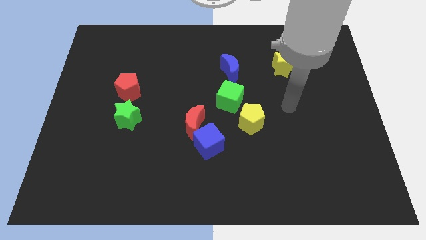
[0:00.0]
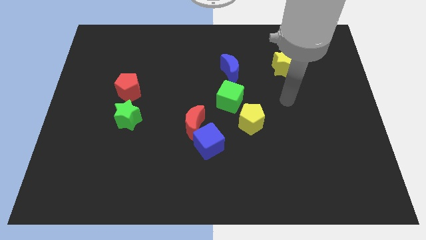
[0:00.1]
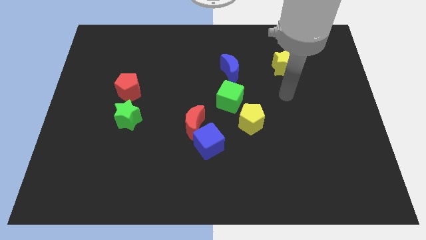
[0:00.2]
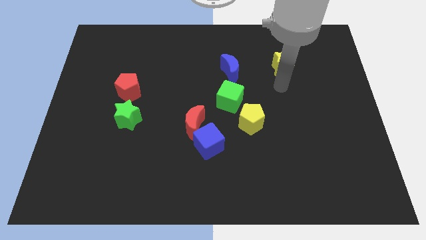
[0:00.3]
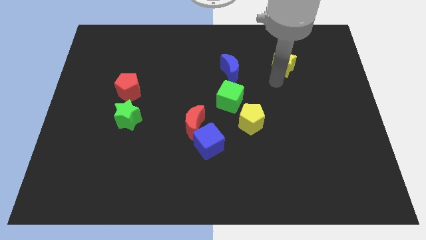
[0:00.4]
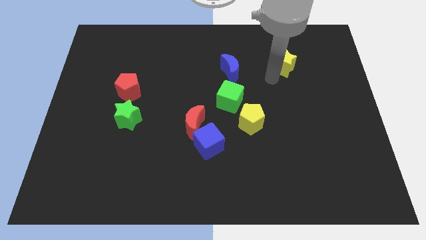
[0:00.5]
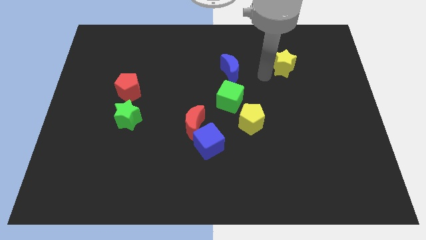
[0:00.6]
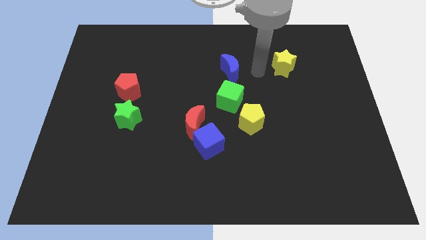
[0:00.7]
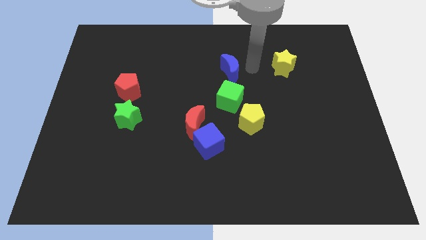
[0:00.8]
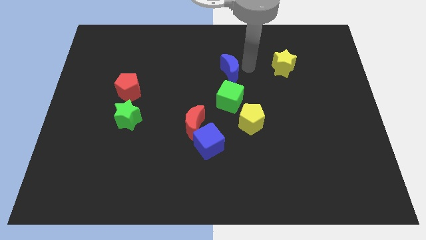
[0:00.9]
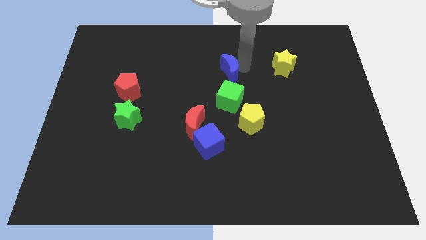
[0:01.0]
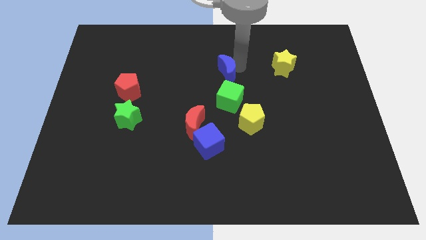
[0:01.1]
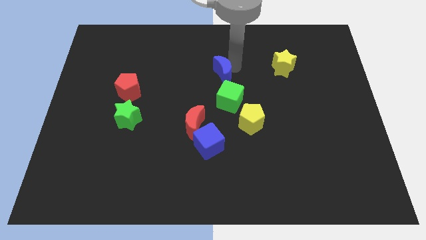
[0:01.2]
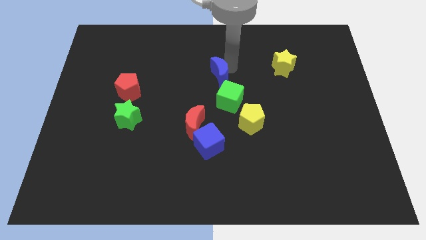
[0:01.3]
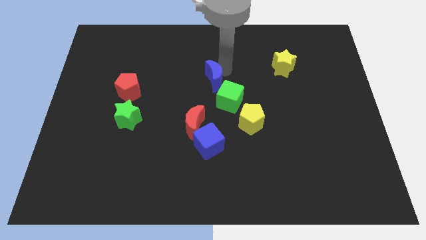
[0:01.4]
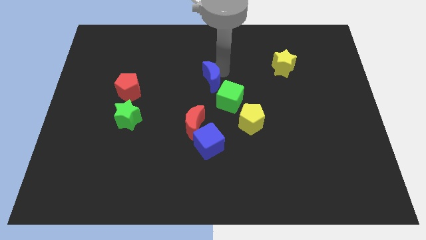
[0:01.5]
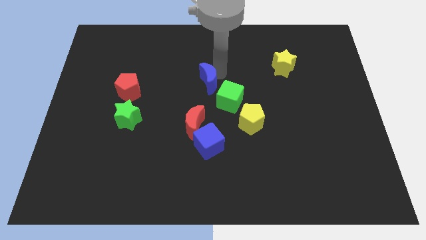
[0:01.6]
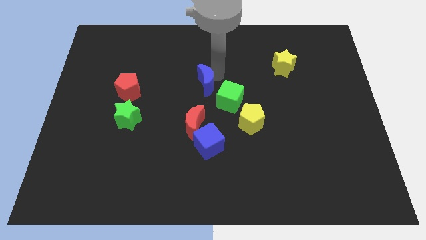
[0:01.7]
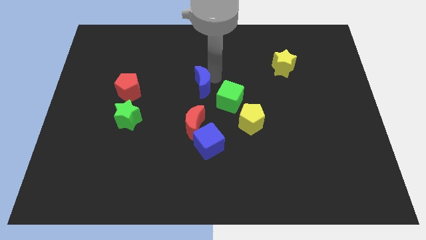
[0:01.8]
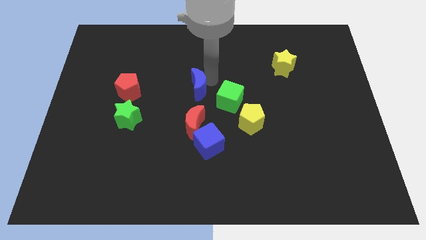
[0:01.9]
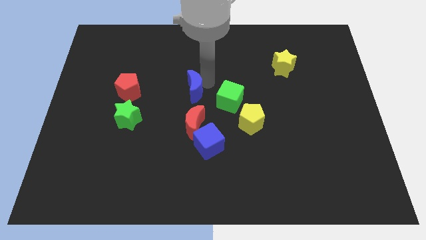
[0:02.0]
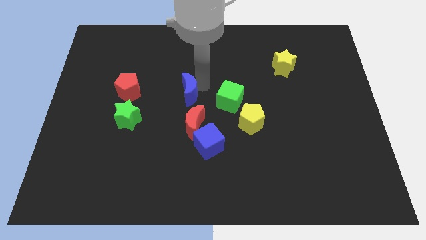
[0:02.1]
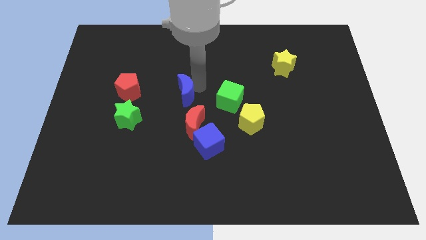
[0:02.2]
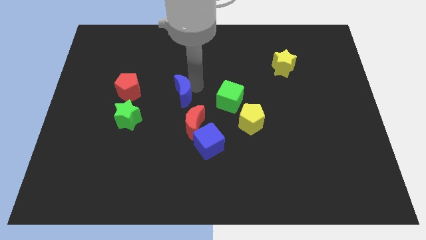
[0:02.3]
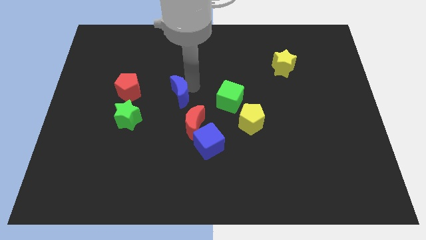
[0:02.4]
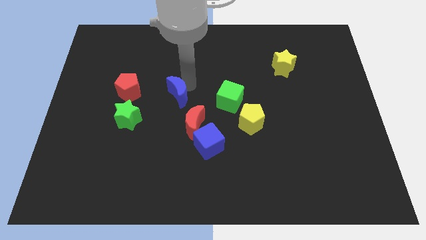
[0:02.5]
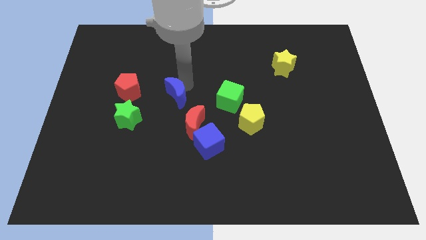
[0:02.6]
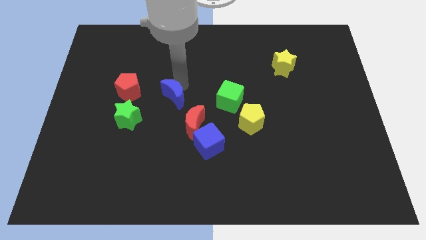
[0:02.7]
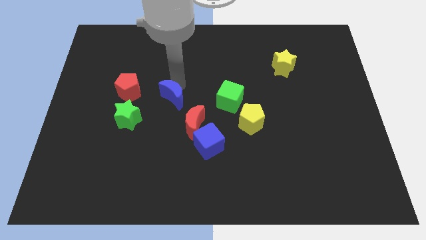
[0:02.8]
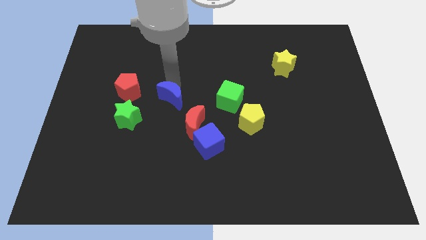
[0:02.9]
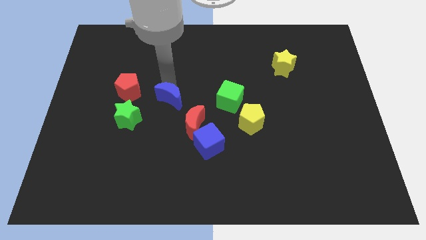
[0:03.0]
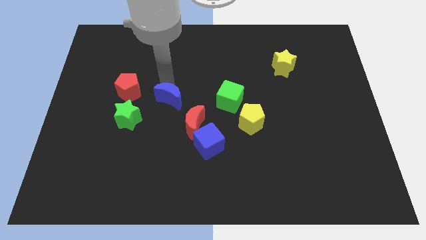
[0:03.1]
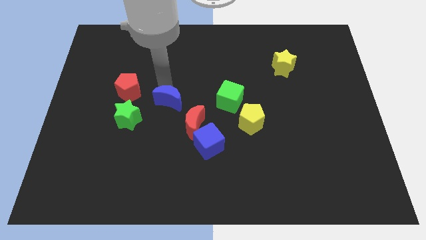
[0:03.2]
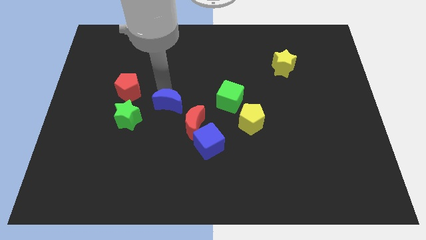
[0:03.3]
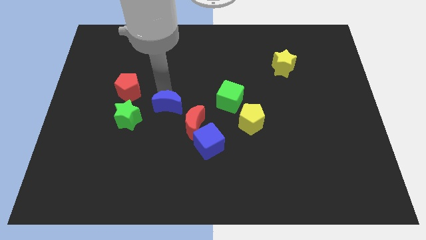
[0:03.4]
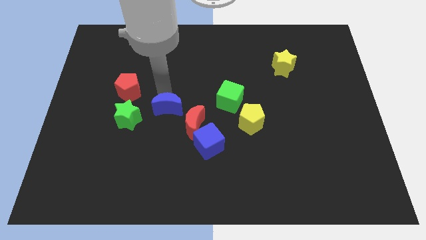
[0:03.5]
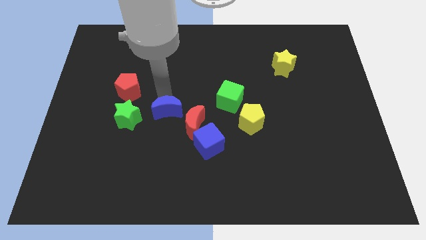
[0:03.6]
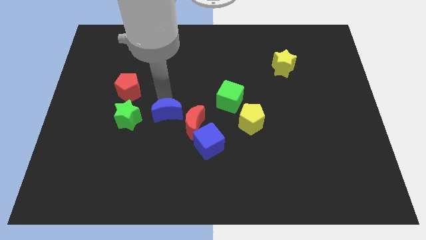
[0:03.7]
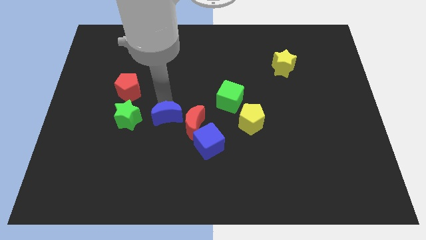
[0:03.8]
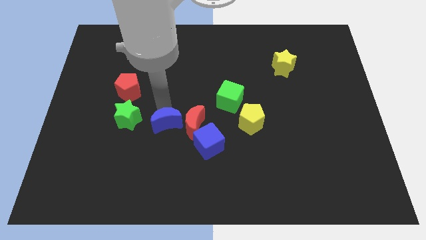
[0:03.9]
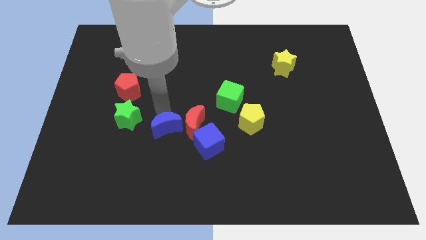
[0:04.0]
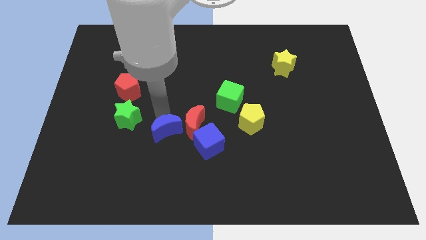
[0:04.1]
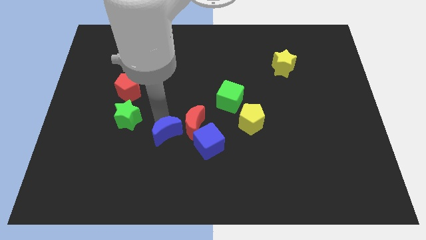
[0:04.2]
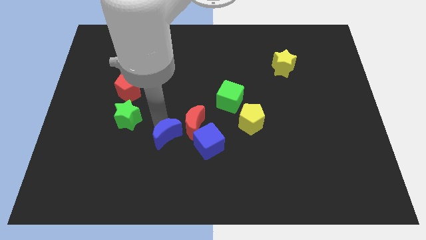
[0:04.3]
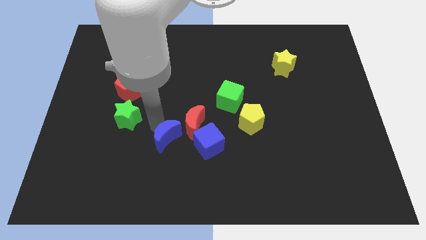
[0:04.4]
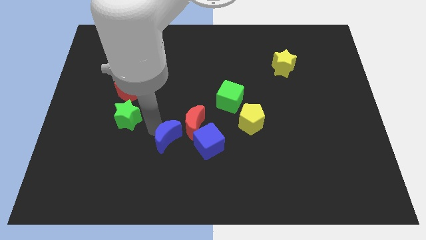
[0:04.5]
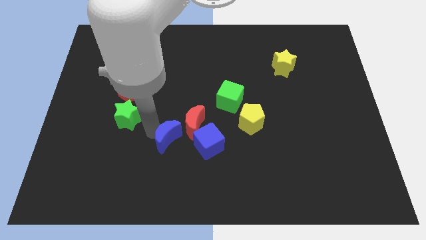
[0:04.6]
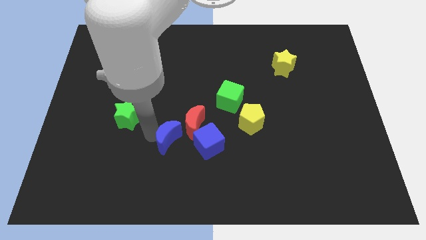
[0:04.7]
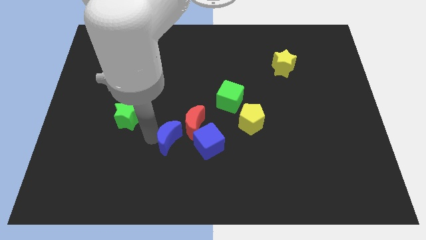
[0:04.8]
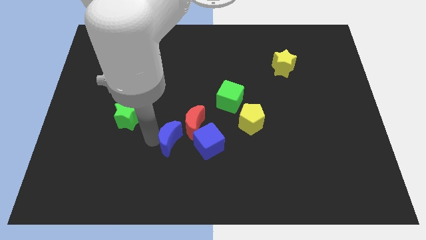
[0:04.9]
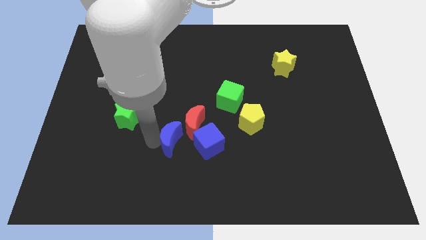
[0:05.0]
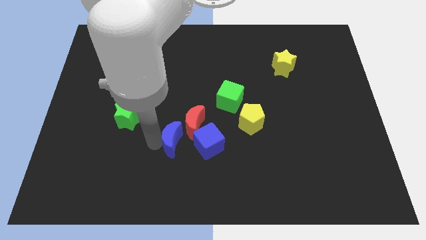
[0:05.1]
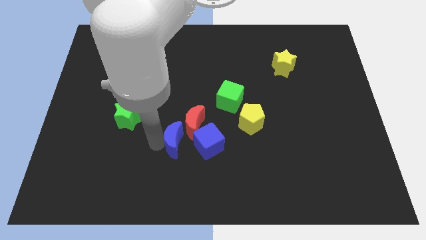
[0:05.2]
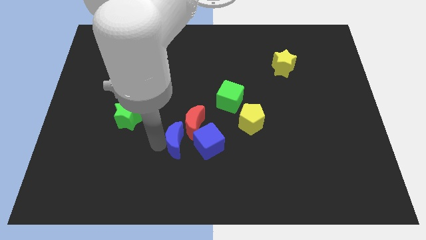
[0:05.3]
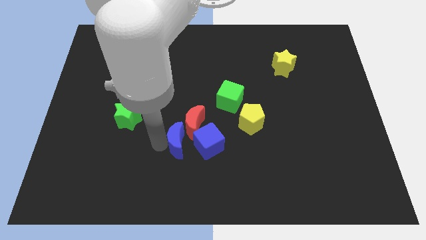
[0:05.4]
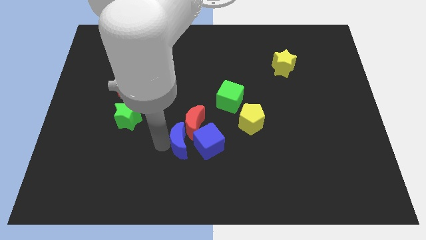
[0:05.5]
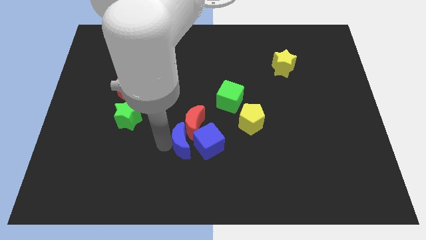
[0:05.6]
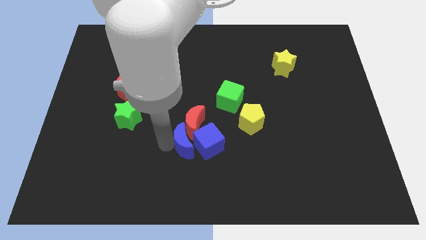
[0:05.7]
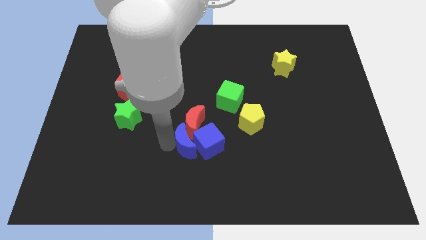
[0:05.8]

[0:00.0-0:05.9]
put the blue moon towards the blue cube

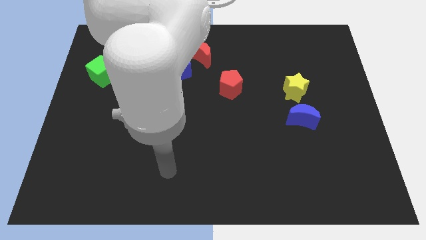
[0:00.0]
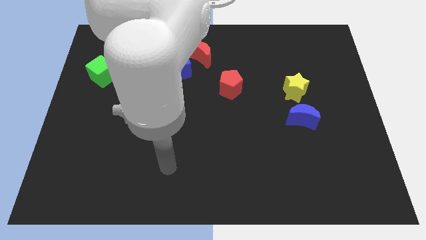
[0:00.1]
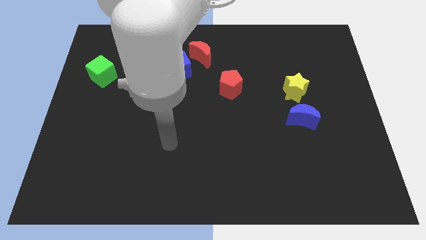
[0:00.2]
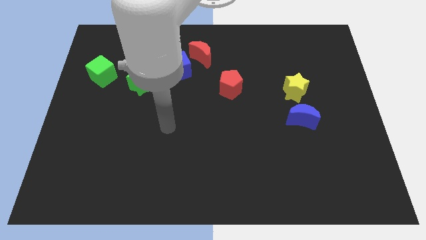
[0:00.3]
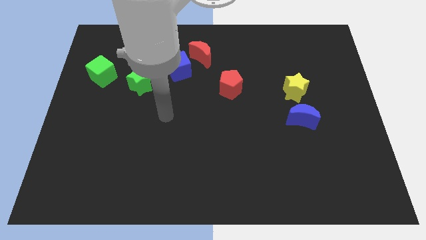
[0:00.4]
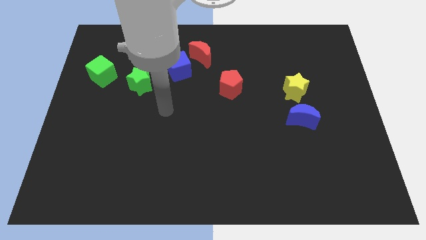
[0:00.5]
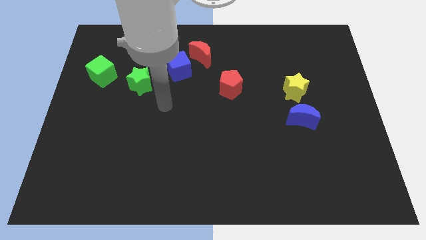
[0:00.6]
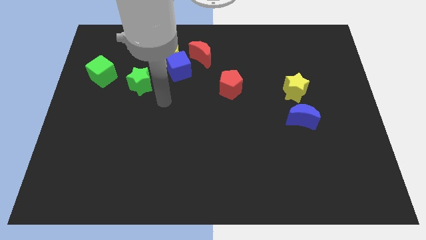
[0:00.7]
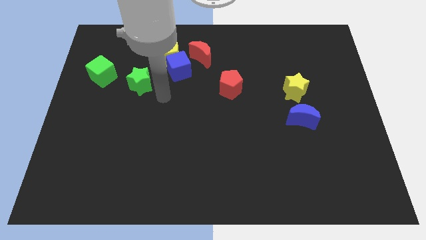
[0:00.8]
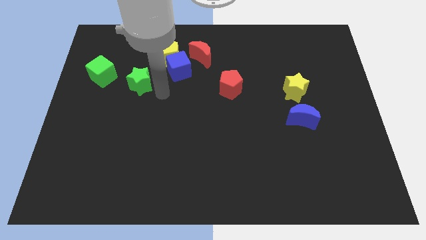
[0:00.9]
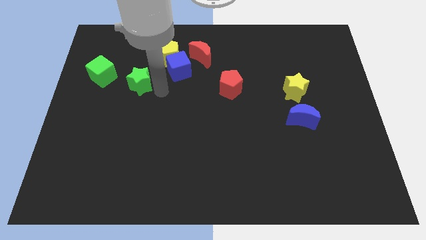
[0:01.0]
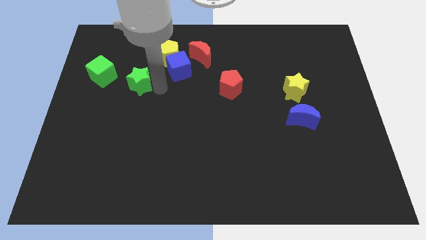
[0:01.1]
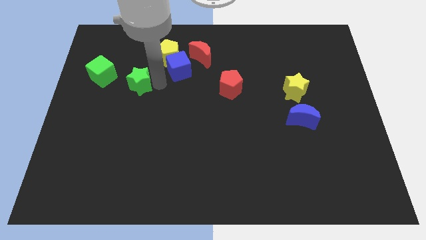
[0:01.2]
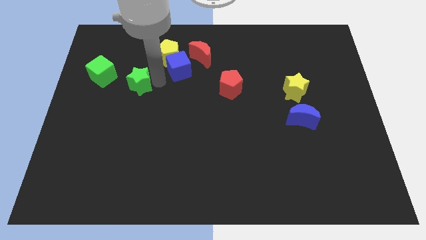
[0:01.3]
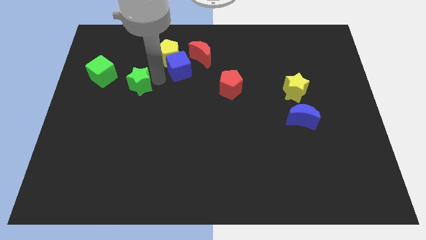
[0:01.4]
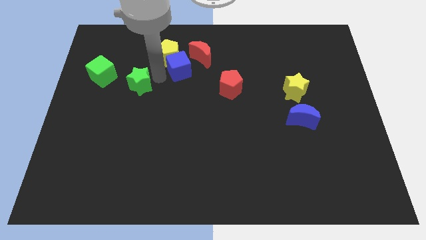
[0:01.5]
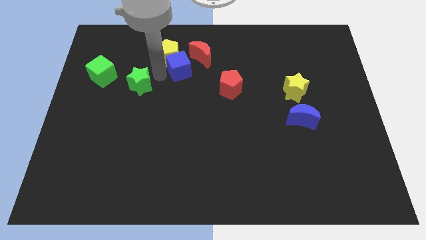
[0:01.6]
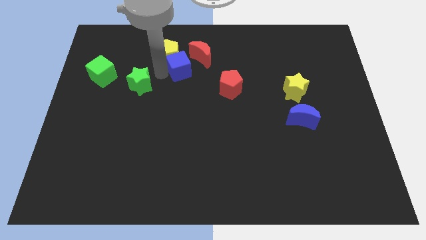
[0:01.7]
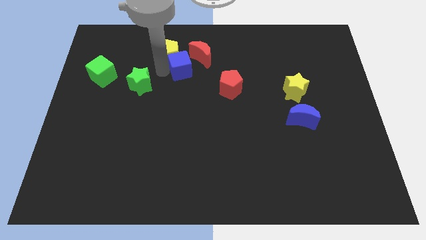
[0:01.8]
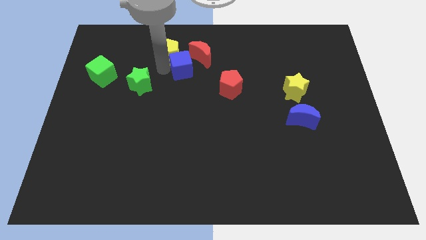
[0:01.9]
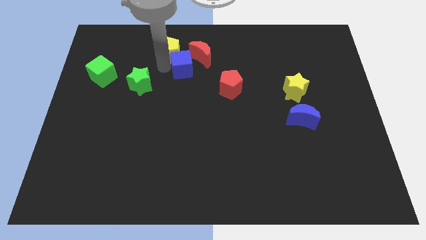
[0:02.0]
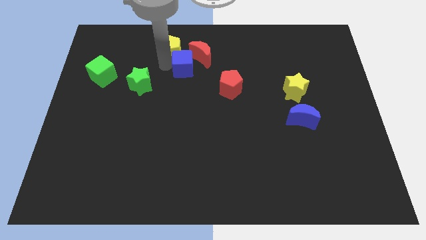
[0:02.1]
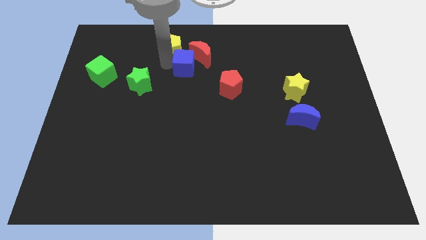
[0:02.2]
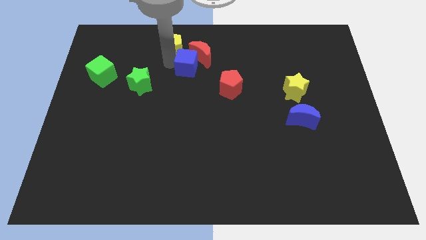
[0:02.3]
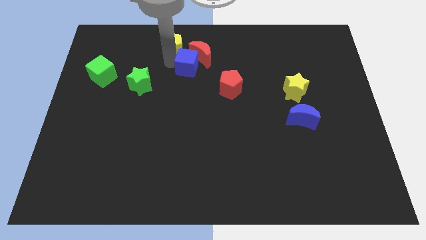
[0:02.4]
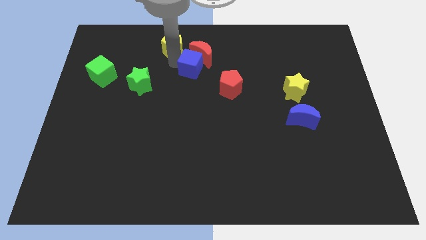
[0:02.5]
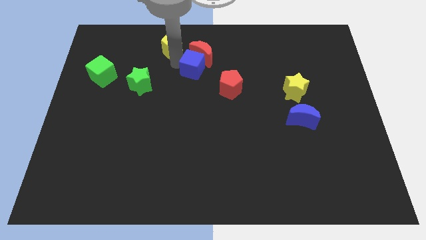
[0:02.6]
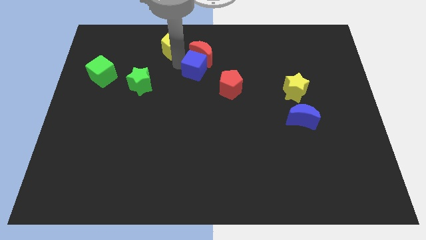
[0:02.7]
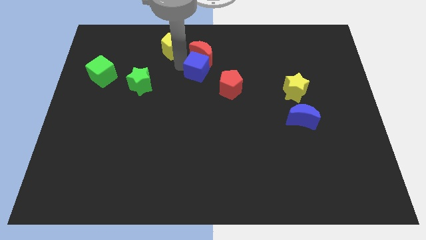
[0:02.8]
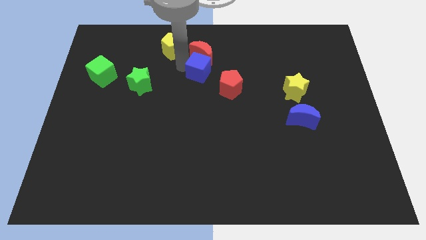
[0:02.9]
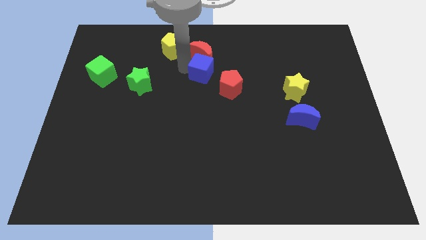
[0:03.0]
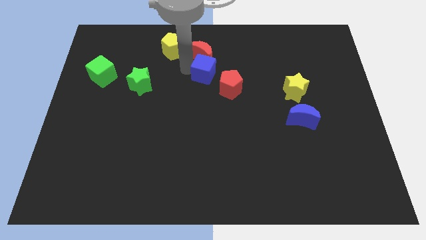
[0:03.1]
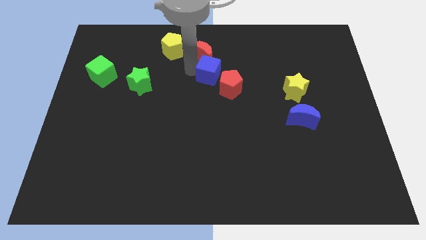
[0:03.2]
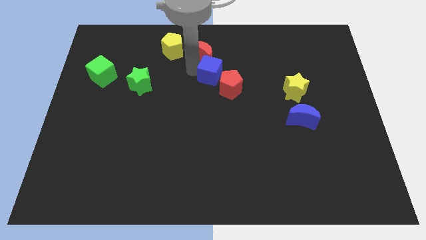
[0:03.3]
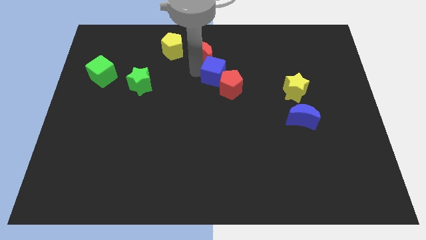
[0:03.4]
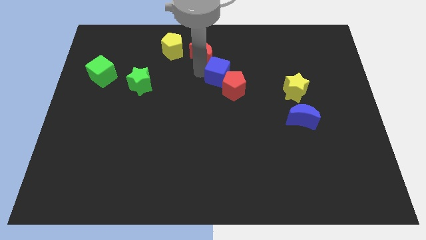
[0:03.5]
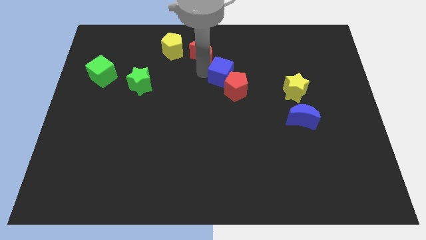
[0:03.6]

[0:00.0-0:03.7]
put the blue cube close to the red pentagon
